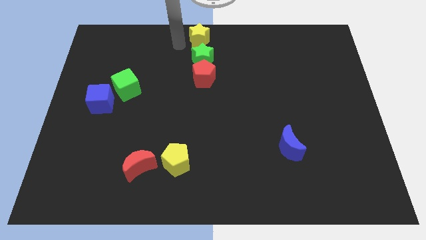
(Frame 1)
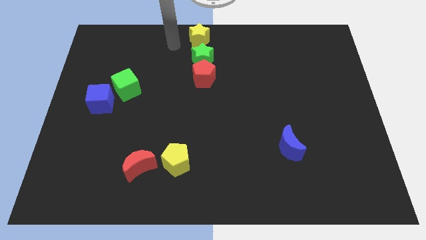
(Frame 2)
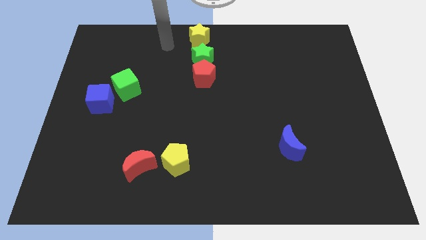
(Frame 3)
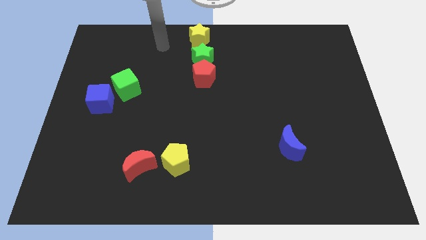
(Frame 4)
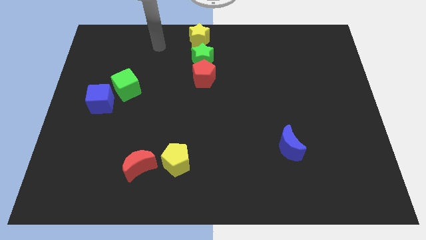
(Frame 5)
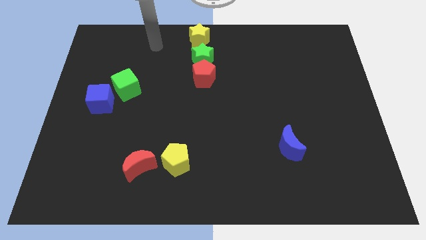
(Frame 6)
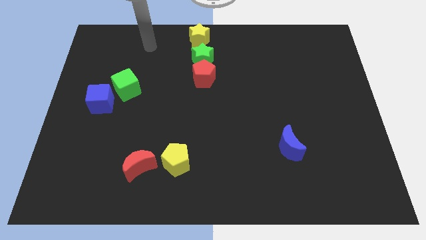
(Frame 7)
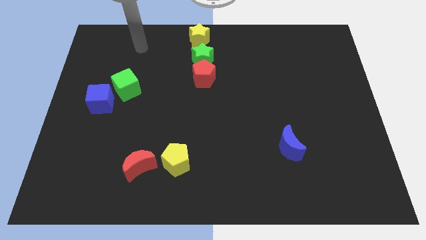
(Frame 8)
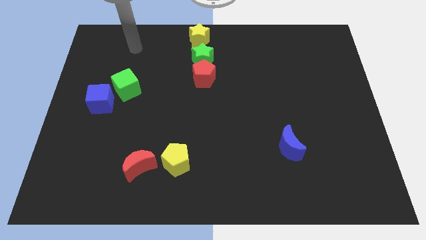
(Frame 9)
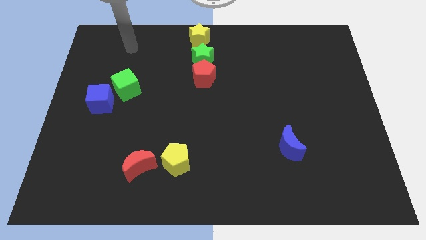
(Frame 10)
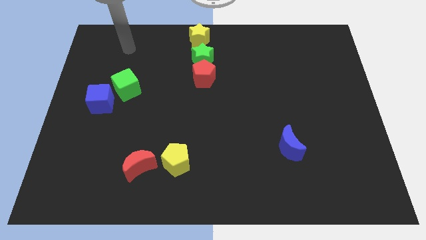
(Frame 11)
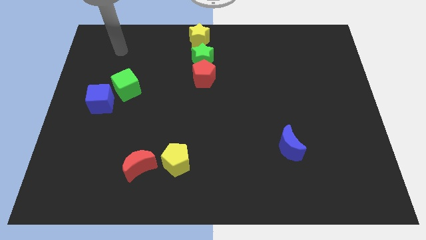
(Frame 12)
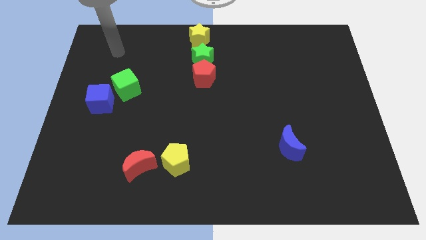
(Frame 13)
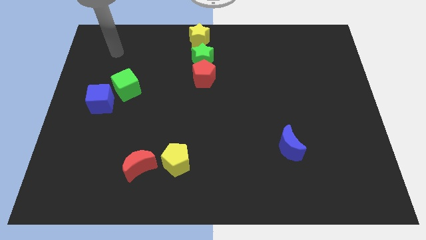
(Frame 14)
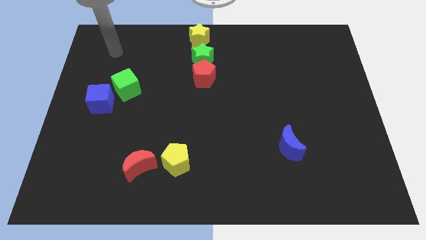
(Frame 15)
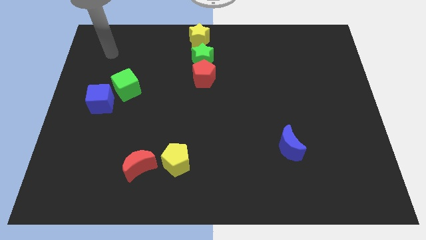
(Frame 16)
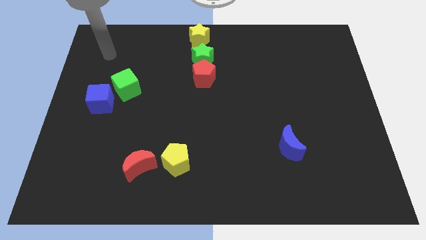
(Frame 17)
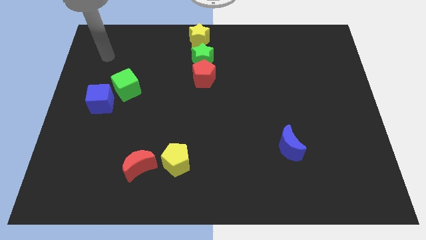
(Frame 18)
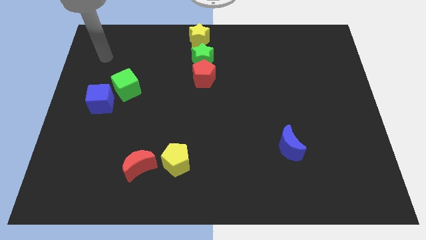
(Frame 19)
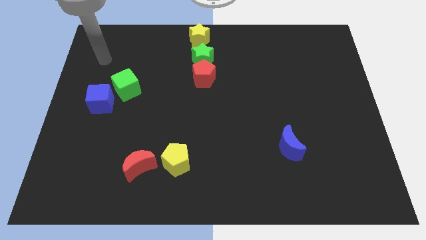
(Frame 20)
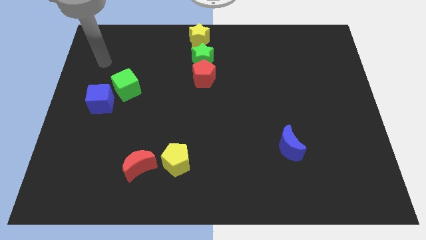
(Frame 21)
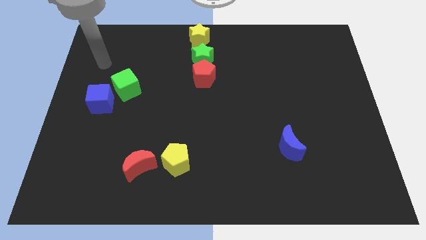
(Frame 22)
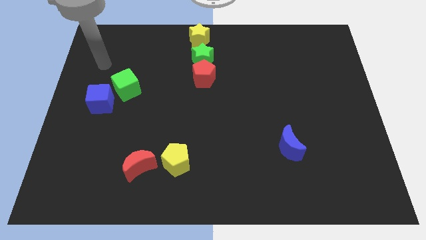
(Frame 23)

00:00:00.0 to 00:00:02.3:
move your arm towards the left side of the board

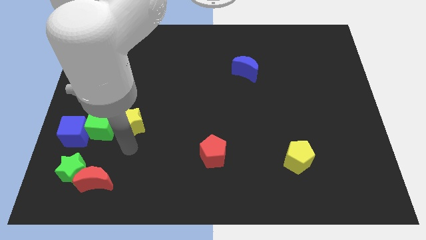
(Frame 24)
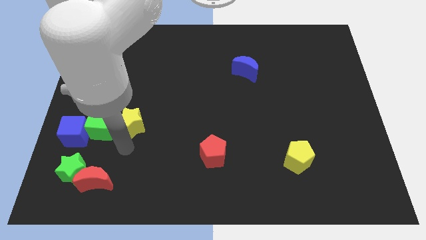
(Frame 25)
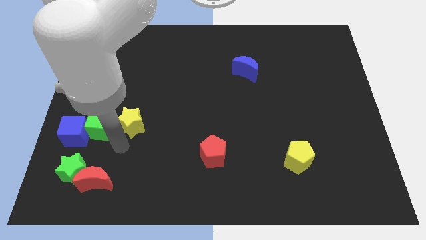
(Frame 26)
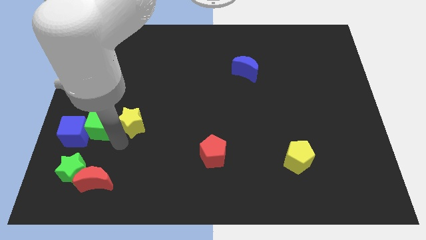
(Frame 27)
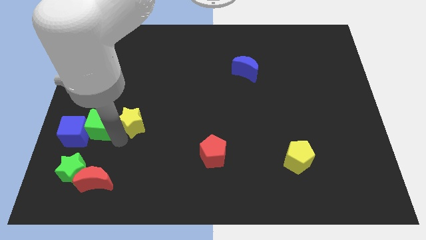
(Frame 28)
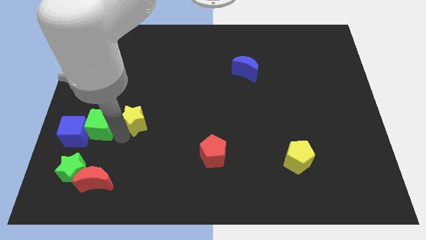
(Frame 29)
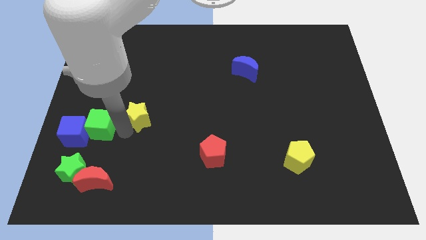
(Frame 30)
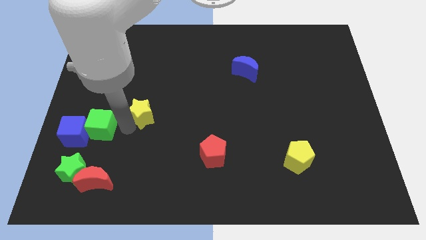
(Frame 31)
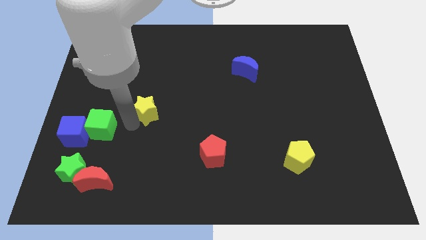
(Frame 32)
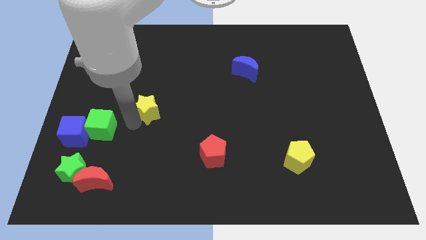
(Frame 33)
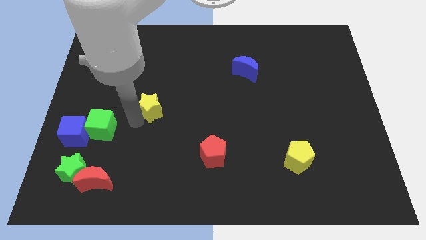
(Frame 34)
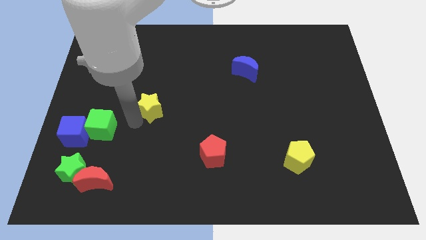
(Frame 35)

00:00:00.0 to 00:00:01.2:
move the yellow star slightly upwards

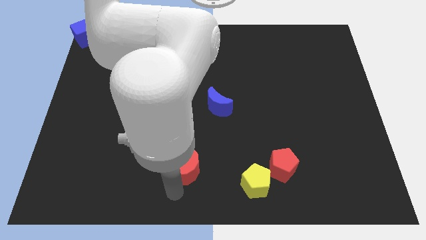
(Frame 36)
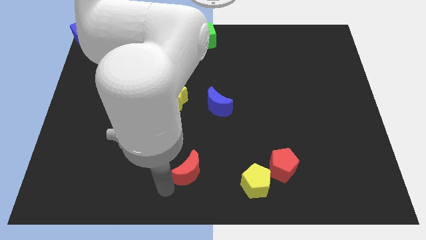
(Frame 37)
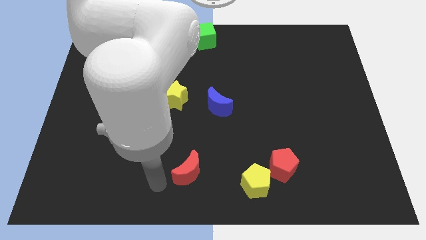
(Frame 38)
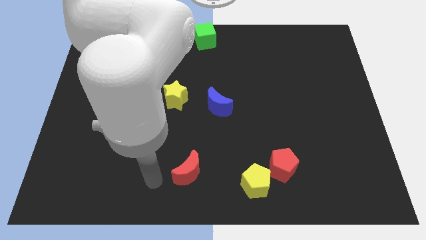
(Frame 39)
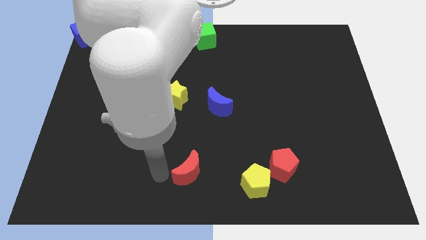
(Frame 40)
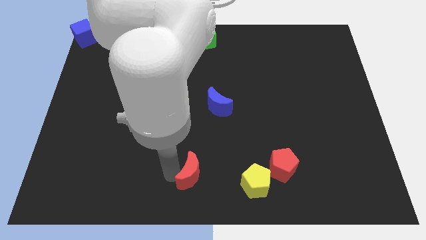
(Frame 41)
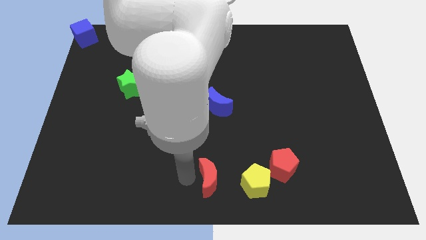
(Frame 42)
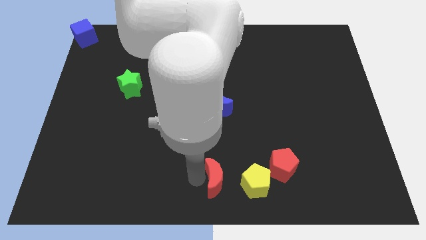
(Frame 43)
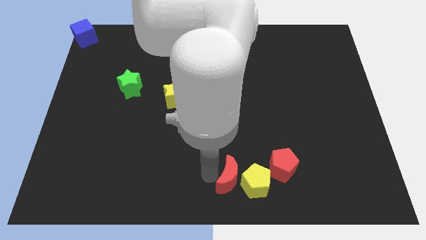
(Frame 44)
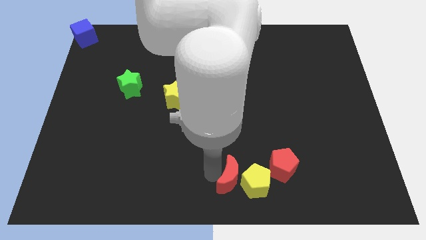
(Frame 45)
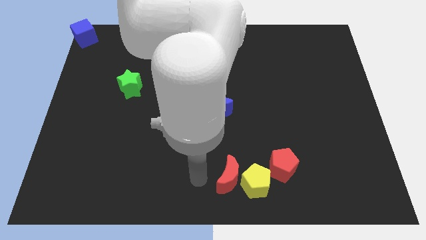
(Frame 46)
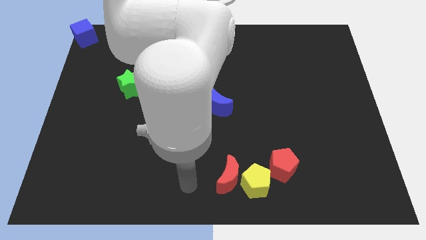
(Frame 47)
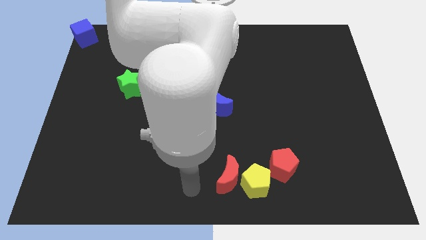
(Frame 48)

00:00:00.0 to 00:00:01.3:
push the red crescent near to the left side of the yellow pentagon

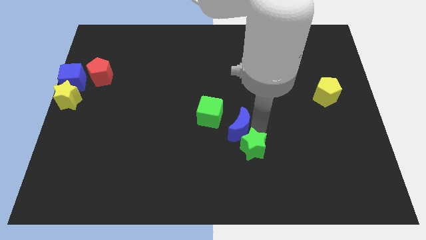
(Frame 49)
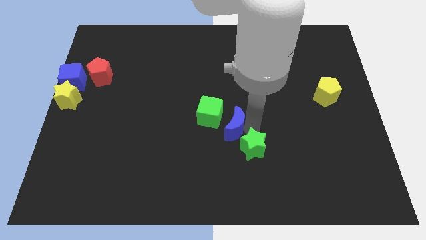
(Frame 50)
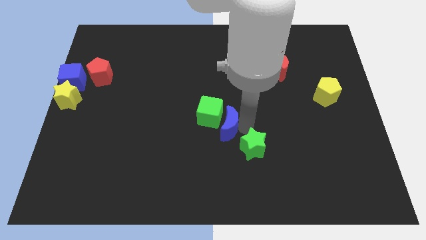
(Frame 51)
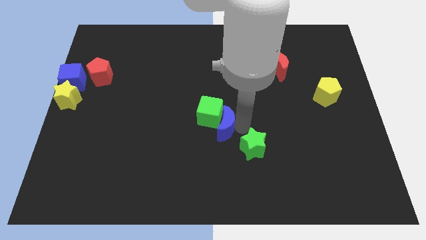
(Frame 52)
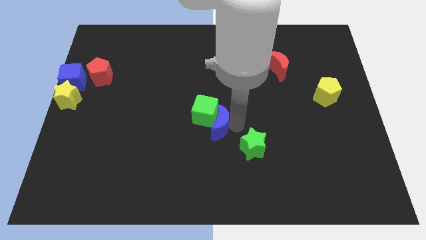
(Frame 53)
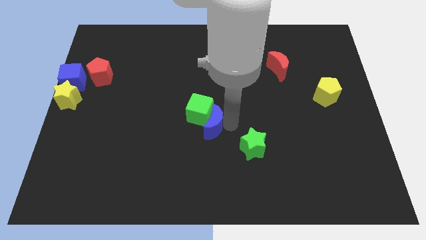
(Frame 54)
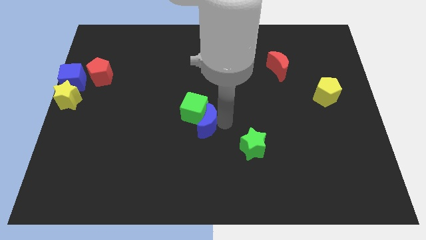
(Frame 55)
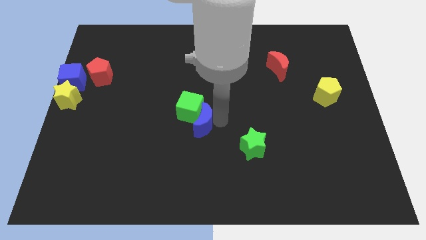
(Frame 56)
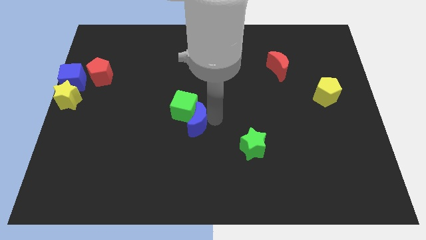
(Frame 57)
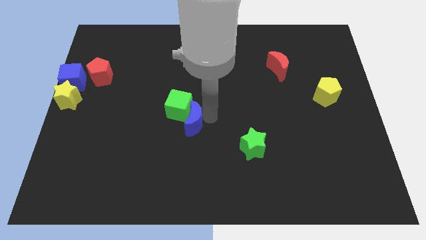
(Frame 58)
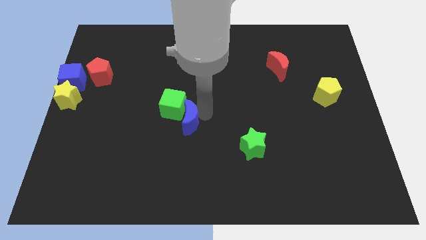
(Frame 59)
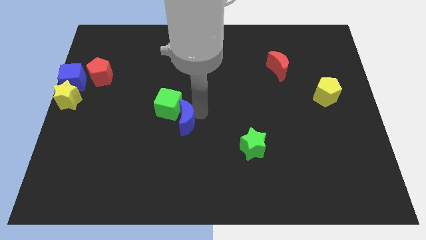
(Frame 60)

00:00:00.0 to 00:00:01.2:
push the green cube with the help of blue crescent towards the left side

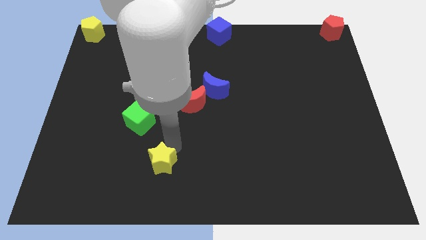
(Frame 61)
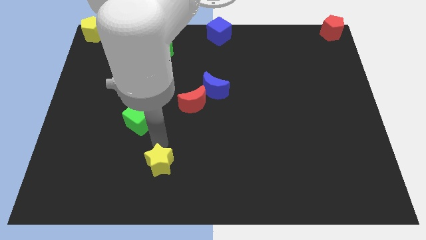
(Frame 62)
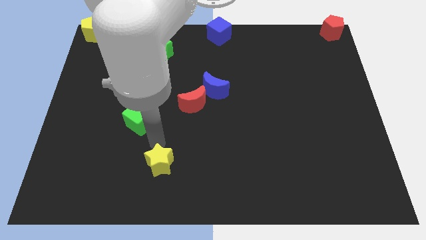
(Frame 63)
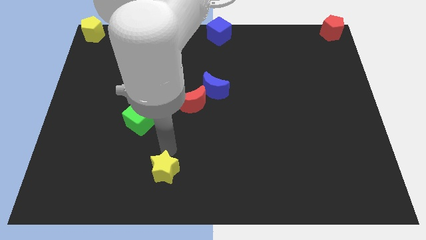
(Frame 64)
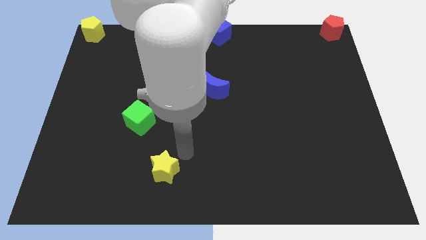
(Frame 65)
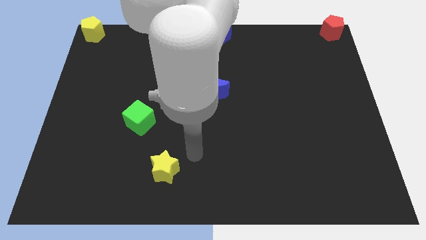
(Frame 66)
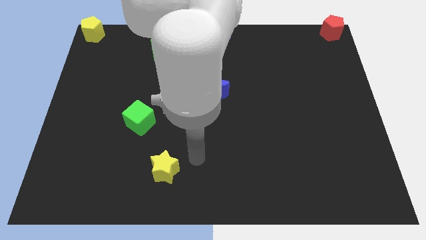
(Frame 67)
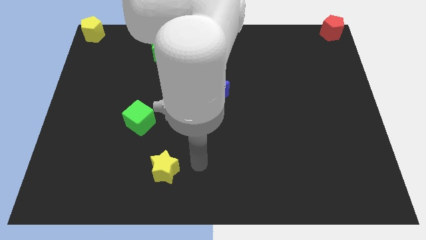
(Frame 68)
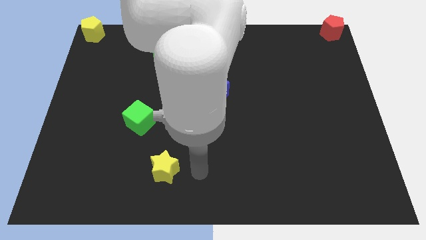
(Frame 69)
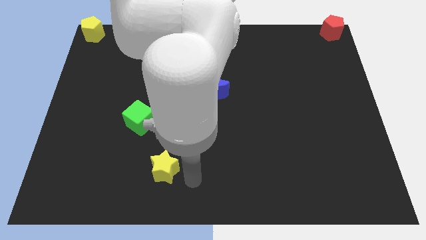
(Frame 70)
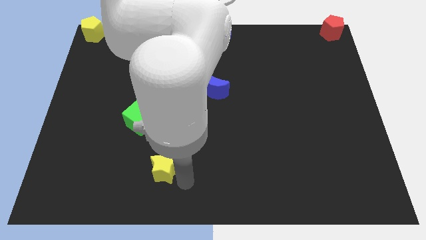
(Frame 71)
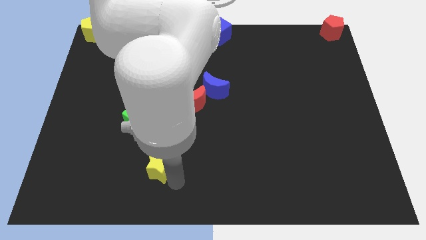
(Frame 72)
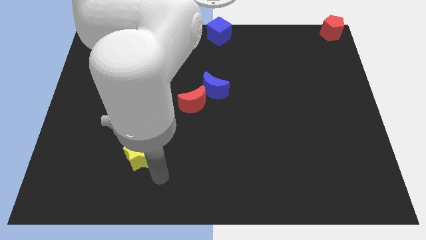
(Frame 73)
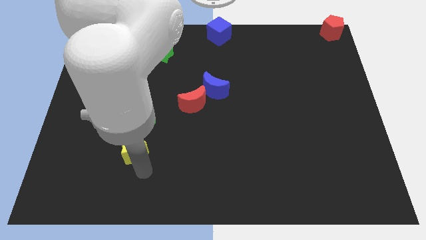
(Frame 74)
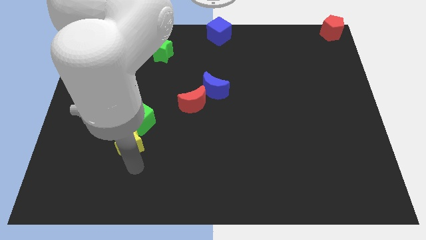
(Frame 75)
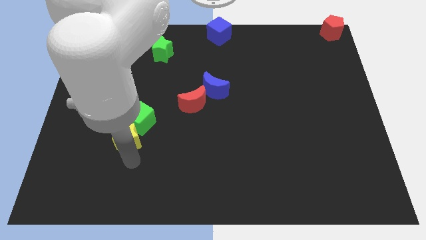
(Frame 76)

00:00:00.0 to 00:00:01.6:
push the yellow star to the bottom of the green cube

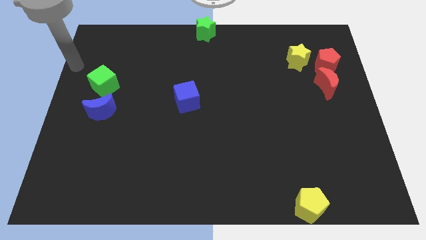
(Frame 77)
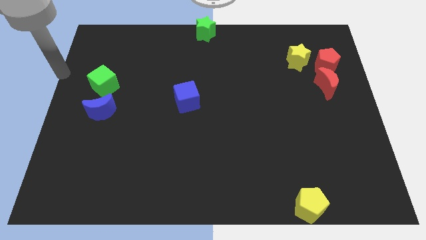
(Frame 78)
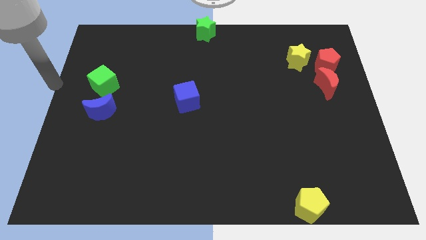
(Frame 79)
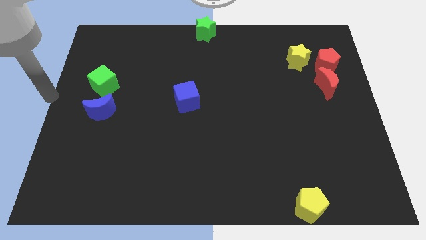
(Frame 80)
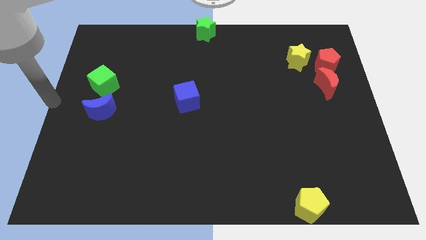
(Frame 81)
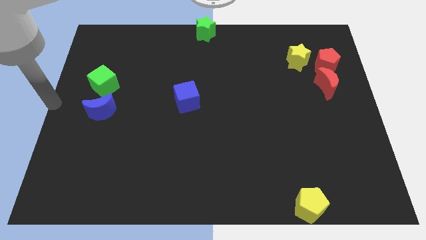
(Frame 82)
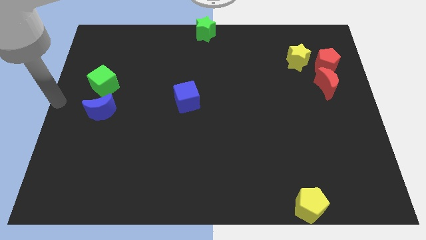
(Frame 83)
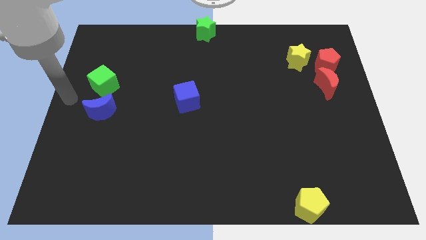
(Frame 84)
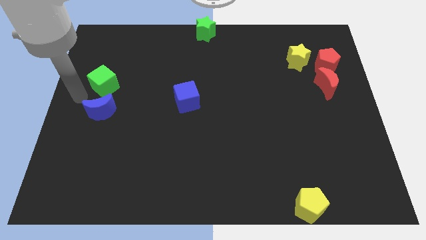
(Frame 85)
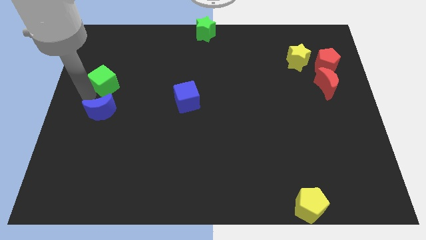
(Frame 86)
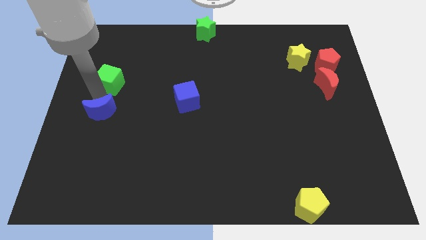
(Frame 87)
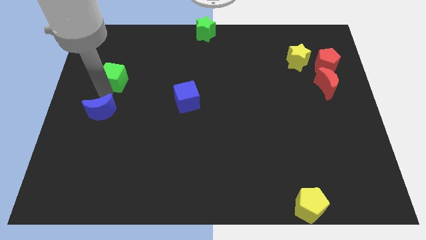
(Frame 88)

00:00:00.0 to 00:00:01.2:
tap on the bottom of the green cube
